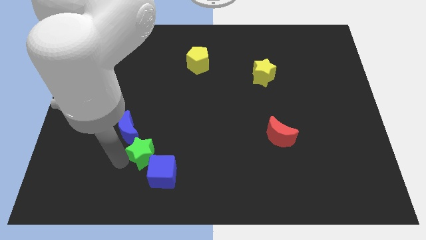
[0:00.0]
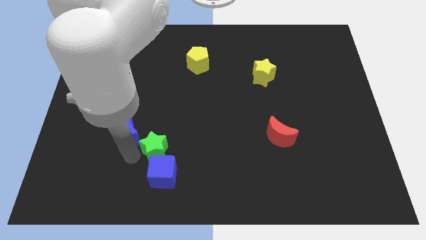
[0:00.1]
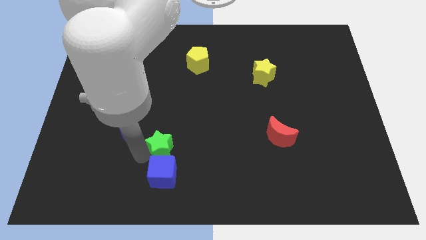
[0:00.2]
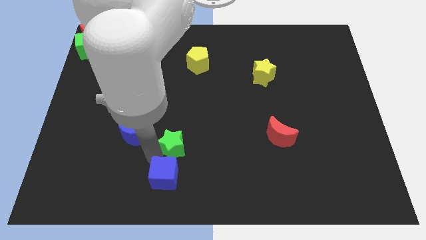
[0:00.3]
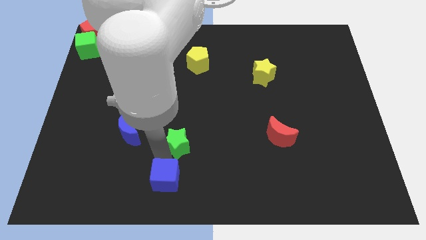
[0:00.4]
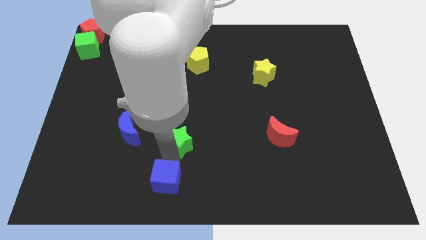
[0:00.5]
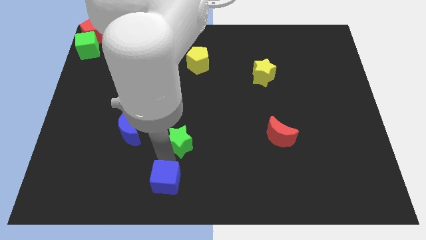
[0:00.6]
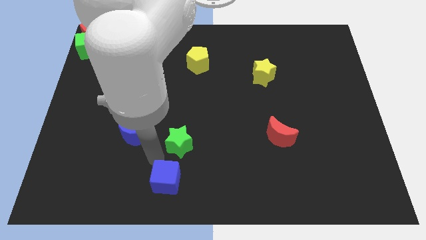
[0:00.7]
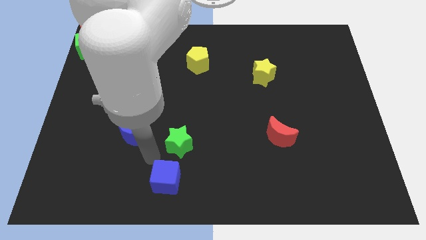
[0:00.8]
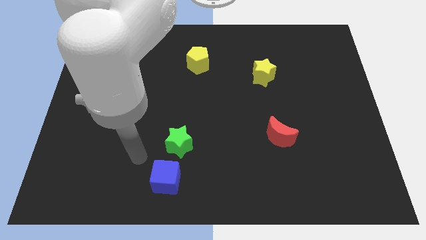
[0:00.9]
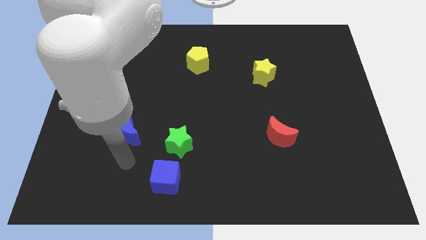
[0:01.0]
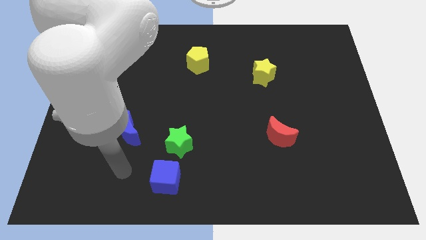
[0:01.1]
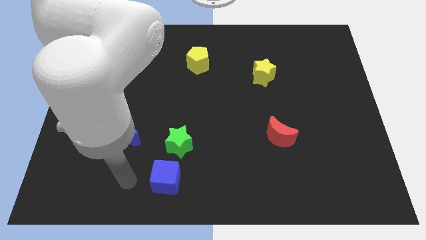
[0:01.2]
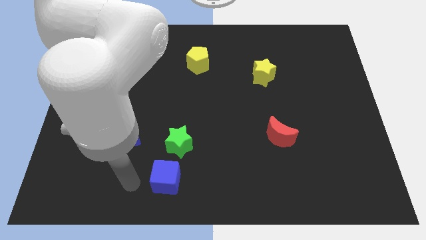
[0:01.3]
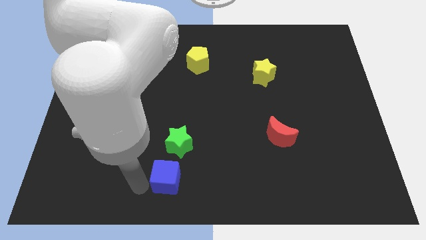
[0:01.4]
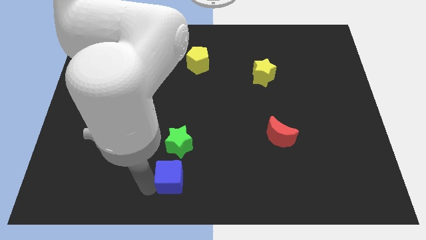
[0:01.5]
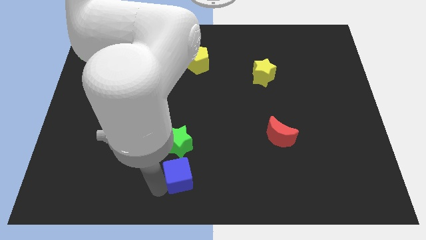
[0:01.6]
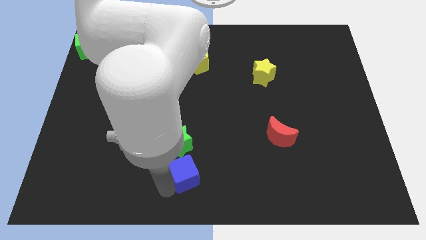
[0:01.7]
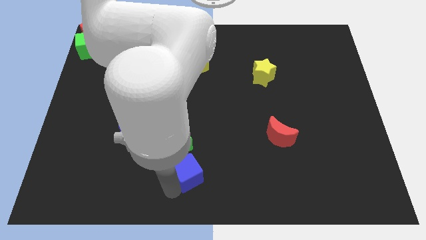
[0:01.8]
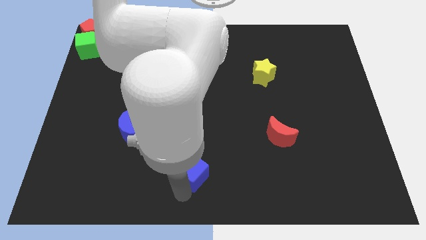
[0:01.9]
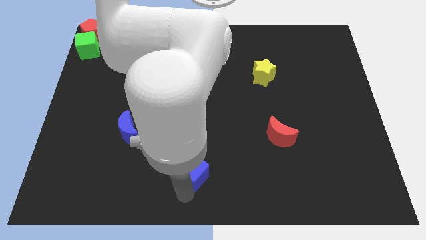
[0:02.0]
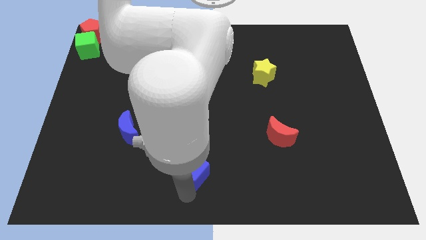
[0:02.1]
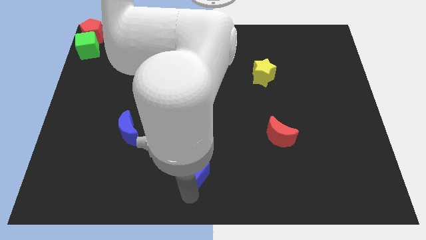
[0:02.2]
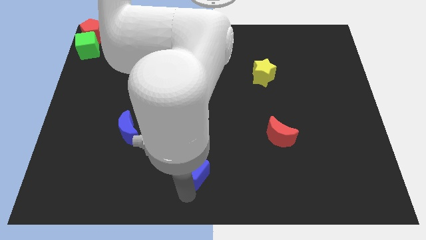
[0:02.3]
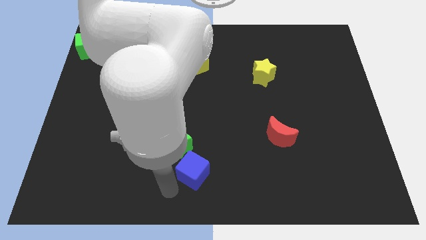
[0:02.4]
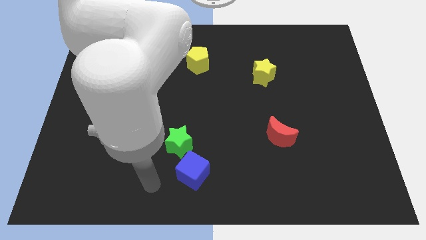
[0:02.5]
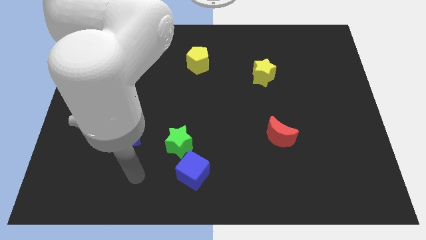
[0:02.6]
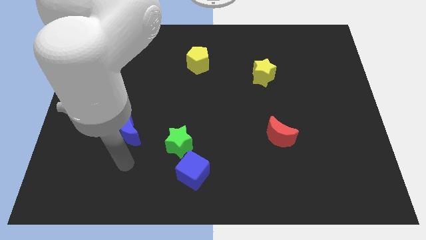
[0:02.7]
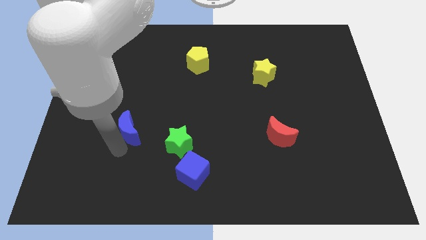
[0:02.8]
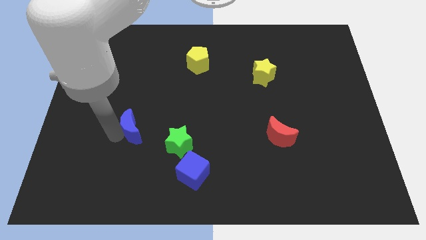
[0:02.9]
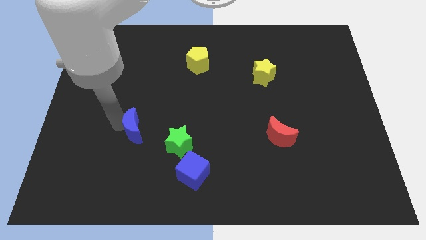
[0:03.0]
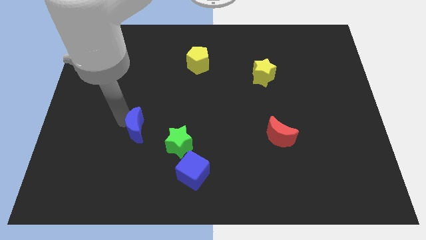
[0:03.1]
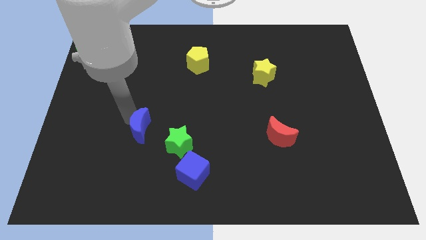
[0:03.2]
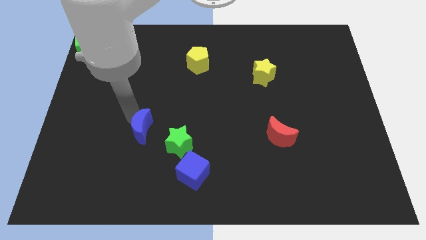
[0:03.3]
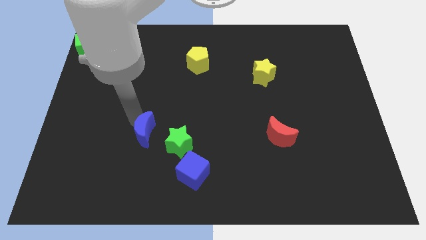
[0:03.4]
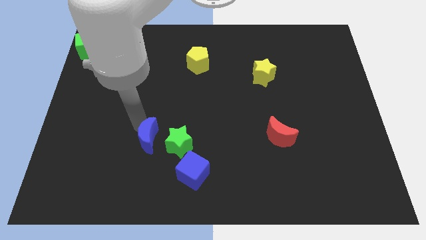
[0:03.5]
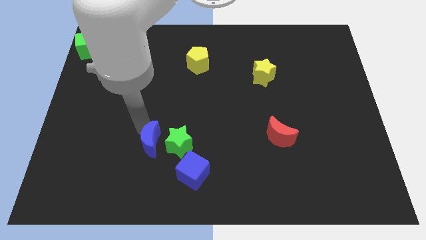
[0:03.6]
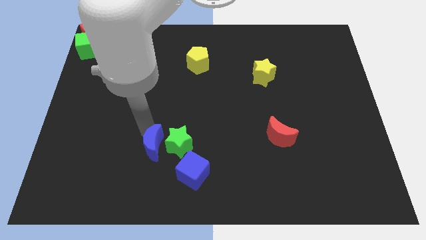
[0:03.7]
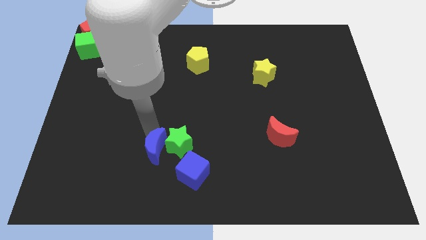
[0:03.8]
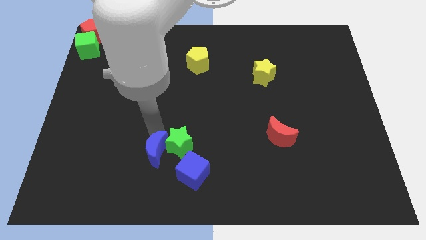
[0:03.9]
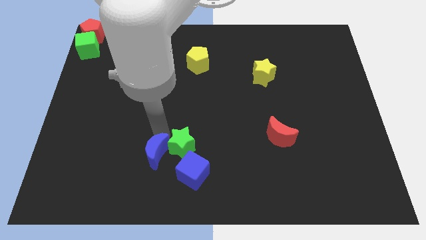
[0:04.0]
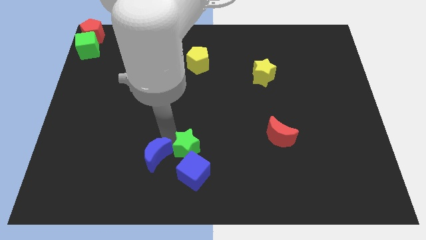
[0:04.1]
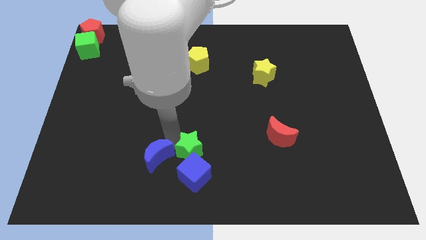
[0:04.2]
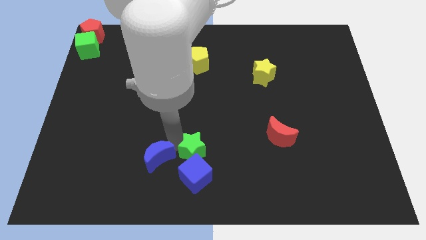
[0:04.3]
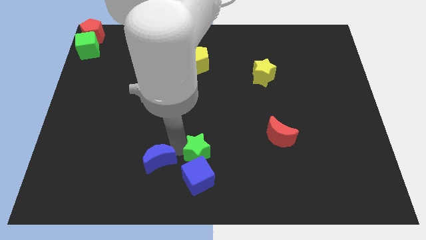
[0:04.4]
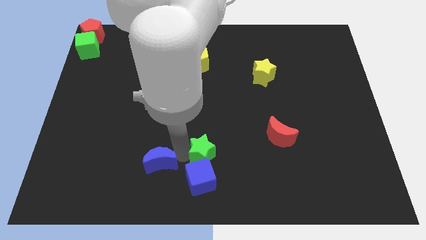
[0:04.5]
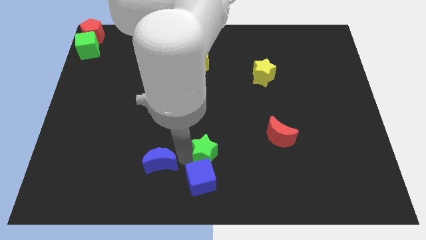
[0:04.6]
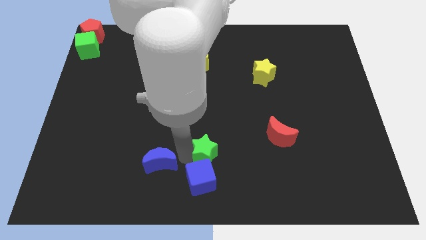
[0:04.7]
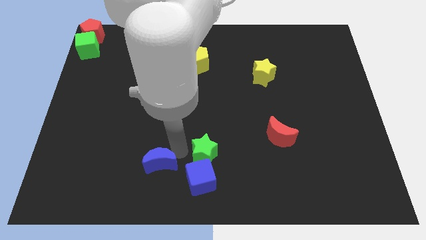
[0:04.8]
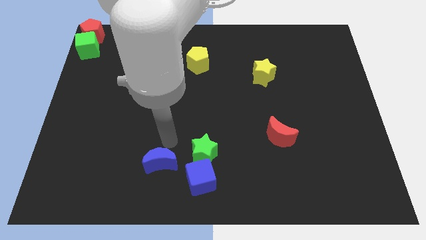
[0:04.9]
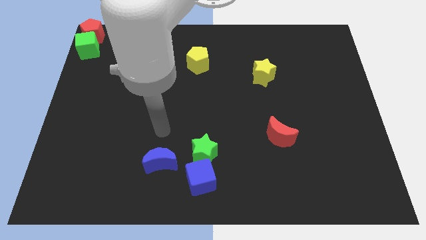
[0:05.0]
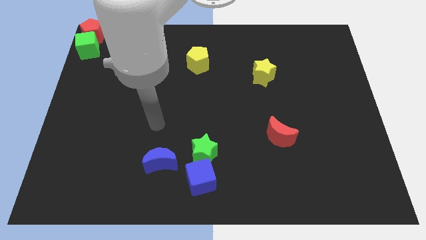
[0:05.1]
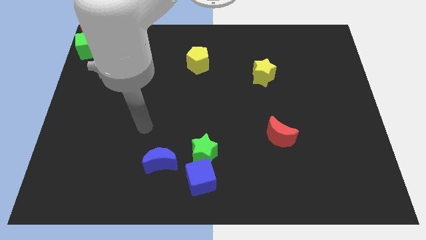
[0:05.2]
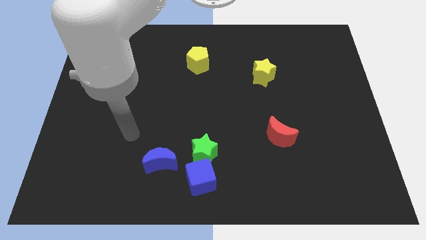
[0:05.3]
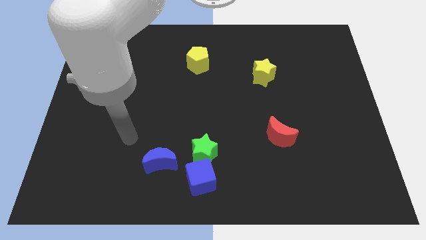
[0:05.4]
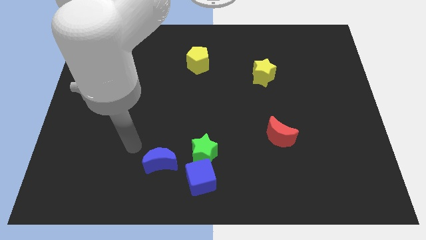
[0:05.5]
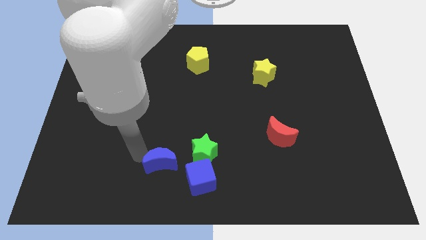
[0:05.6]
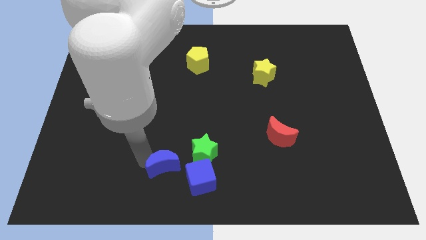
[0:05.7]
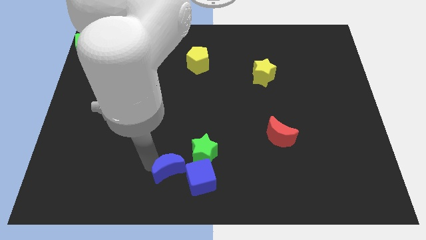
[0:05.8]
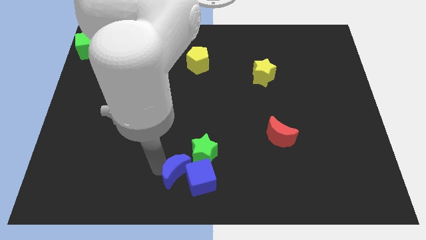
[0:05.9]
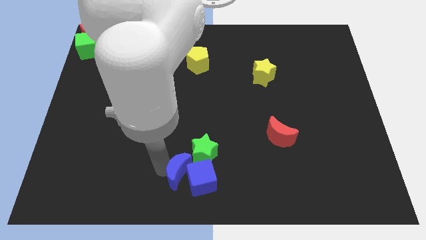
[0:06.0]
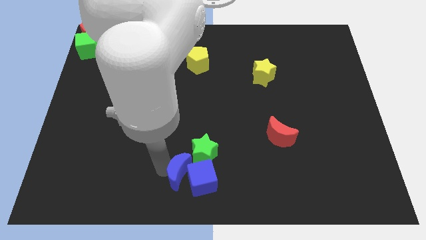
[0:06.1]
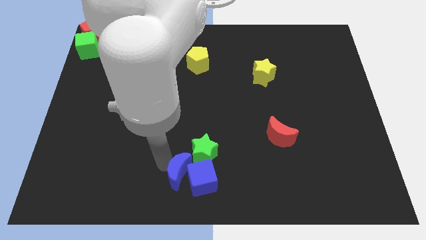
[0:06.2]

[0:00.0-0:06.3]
place both the blue blocks and green star at the bottom center of the board

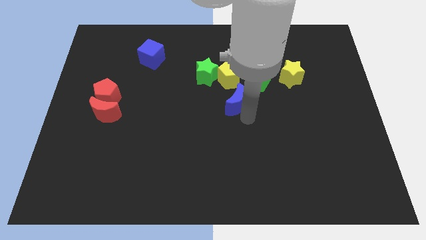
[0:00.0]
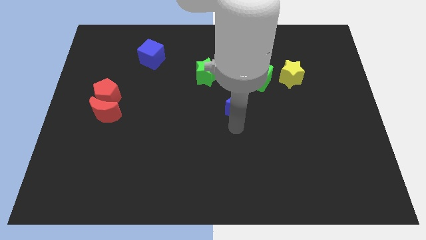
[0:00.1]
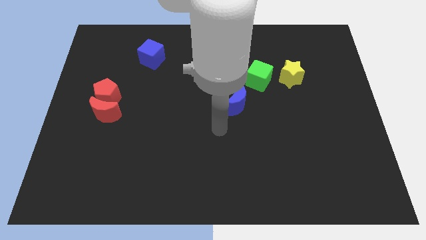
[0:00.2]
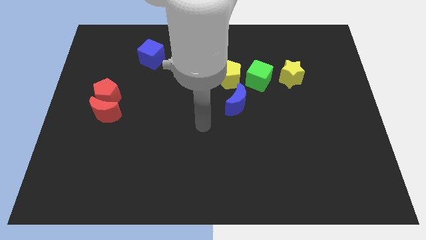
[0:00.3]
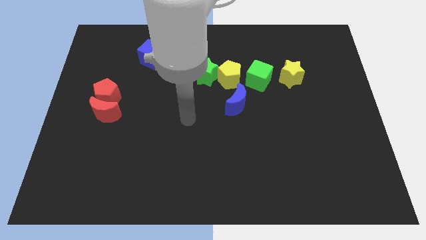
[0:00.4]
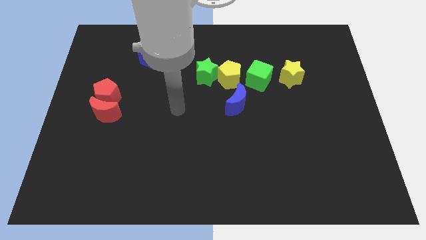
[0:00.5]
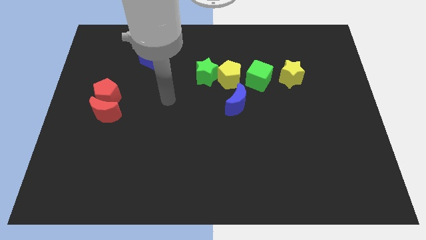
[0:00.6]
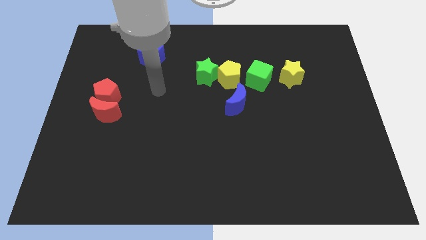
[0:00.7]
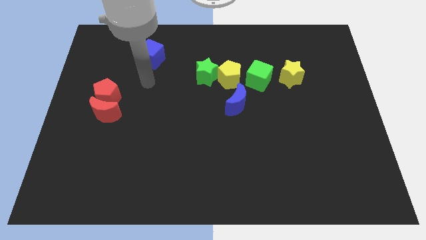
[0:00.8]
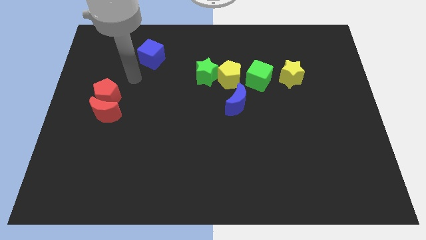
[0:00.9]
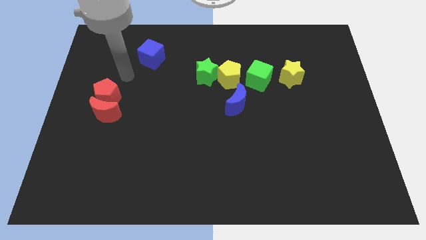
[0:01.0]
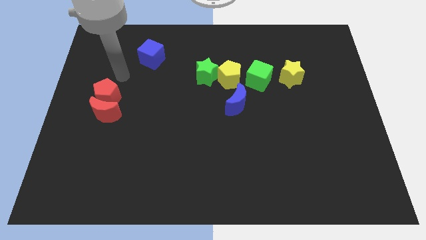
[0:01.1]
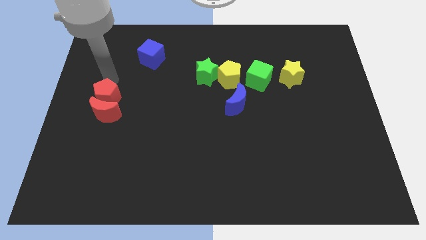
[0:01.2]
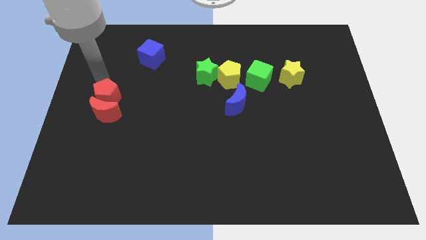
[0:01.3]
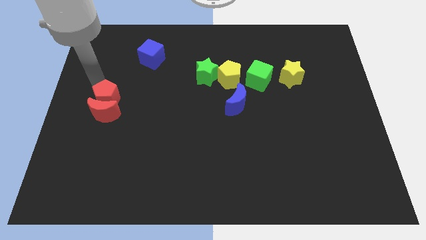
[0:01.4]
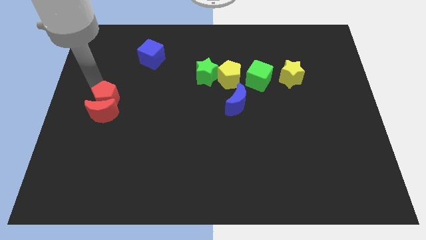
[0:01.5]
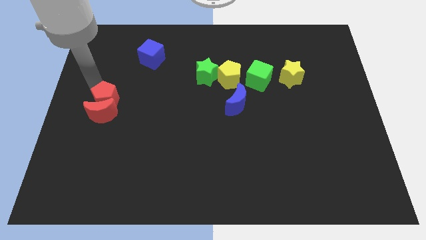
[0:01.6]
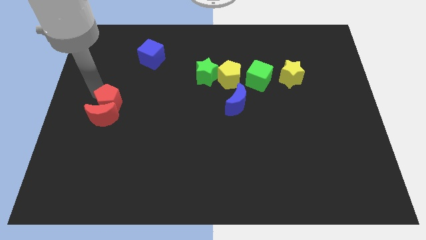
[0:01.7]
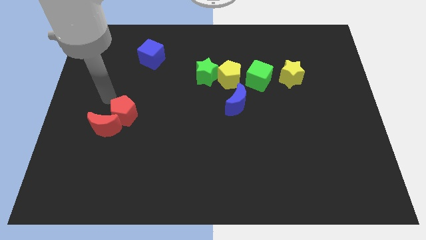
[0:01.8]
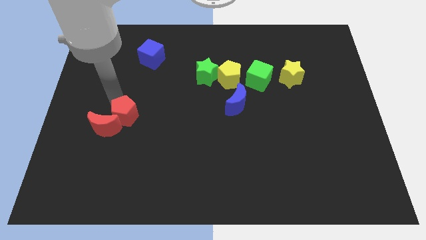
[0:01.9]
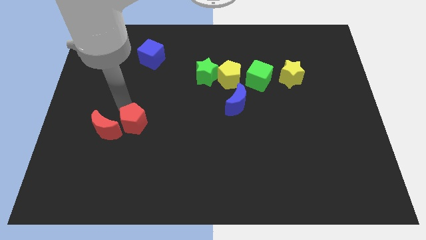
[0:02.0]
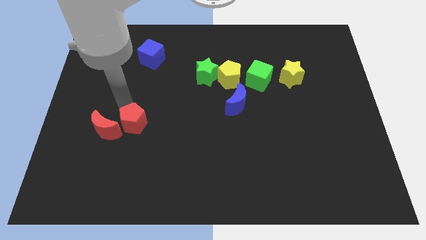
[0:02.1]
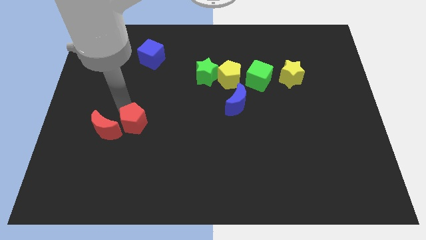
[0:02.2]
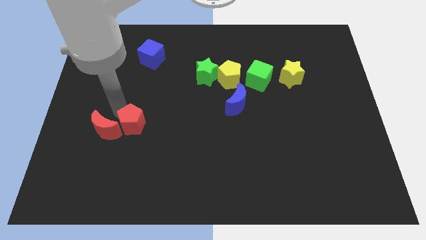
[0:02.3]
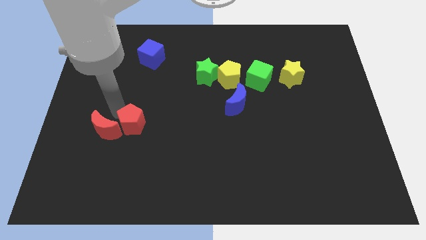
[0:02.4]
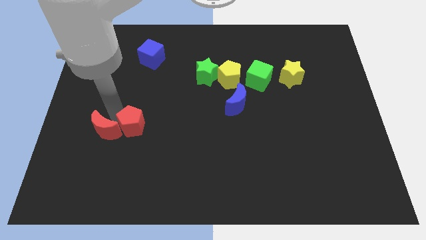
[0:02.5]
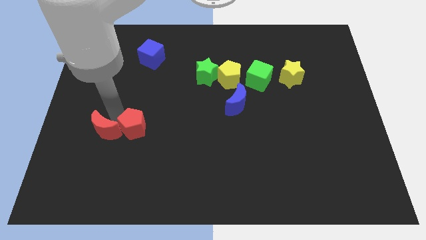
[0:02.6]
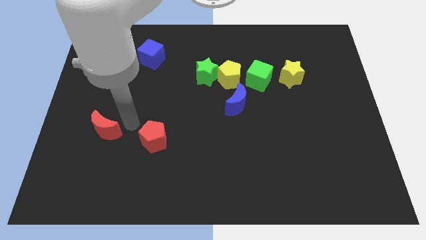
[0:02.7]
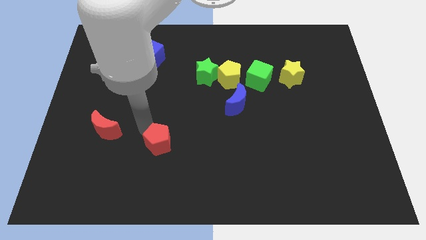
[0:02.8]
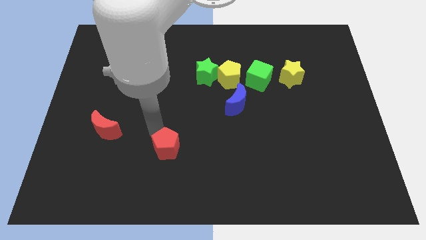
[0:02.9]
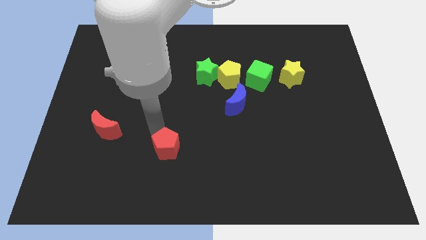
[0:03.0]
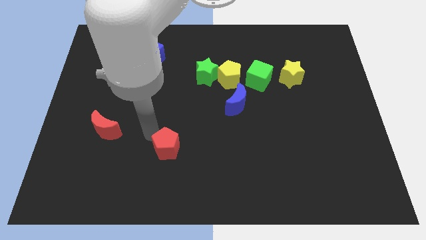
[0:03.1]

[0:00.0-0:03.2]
push the red blocks towards the bottom side of the board
